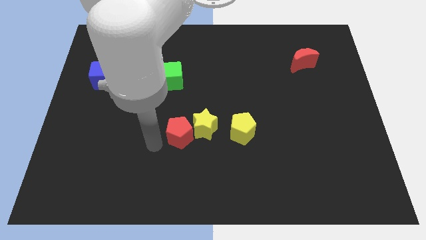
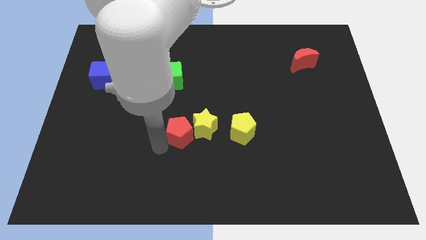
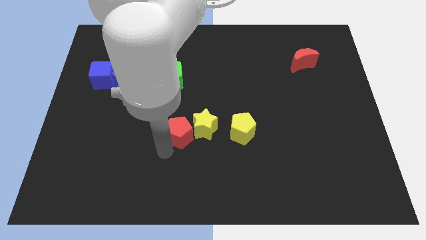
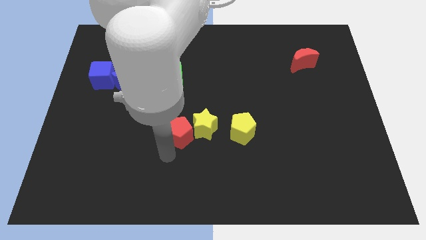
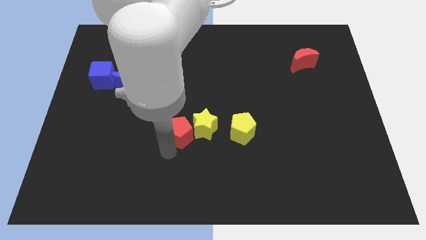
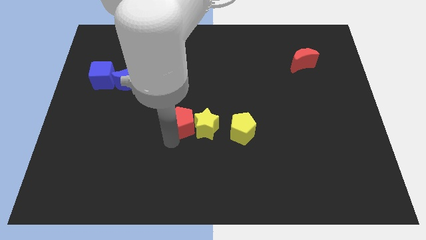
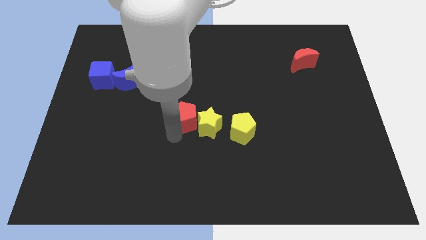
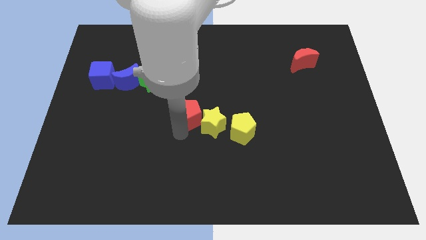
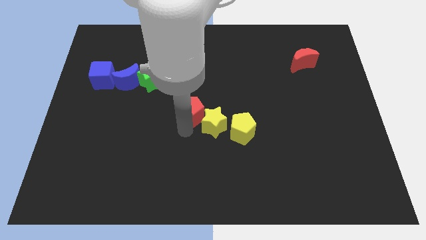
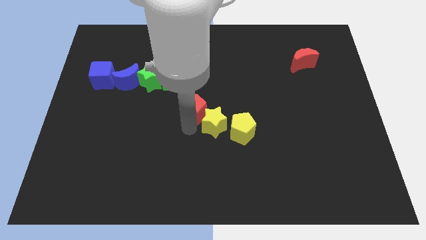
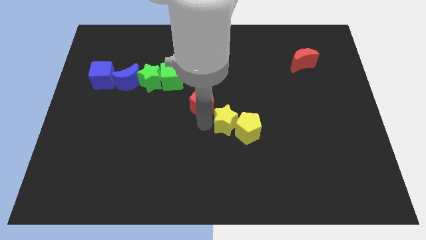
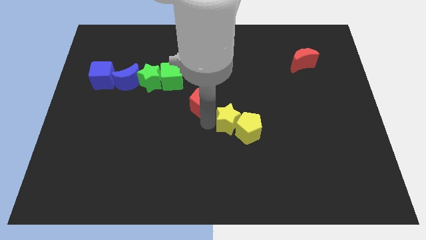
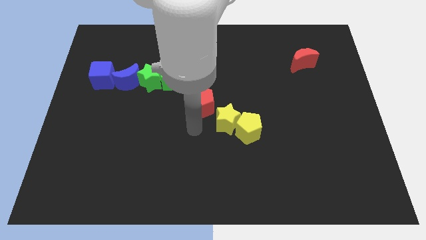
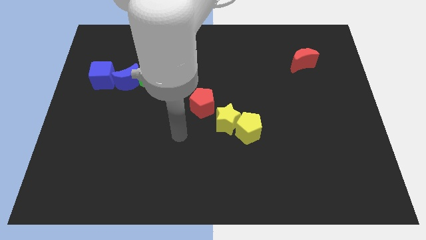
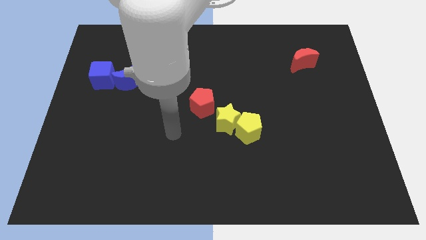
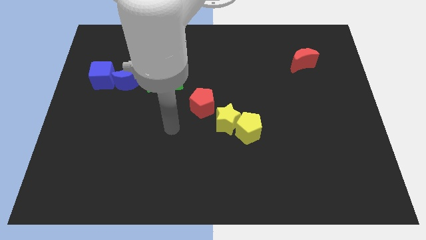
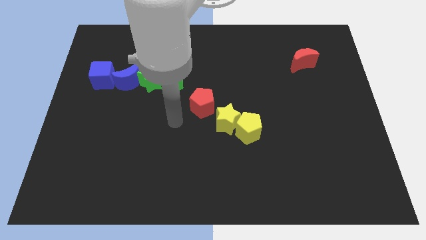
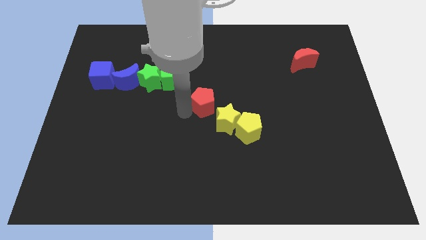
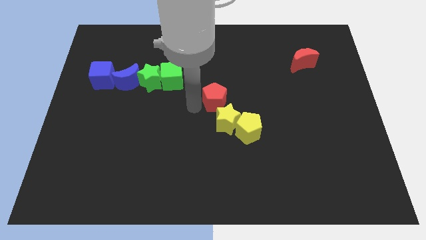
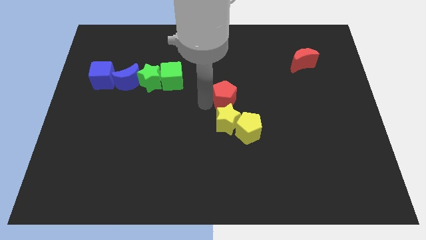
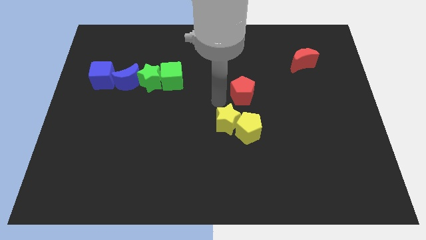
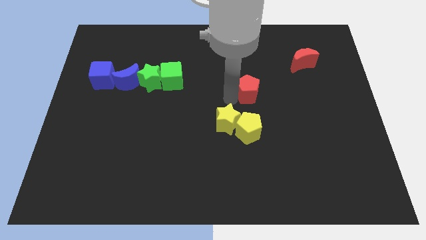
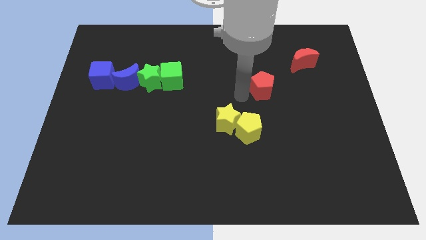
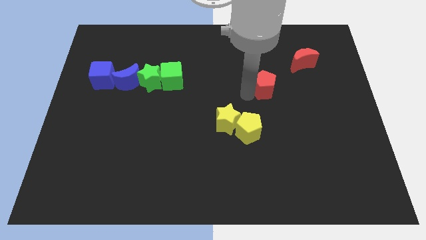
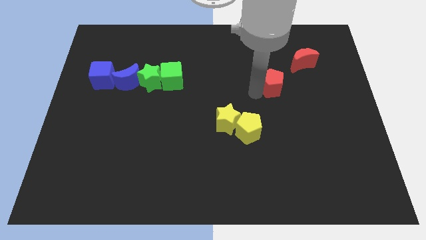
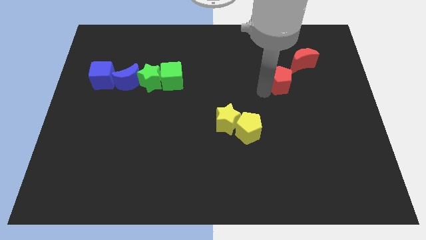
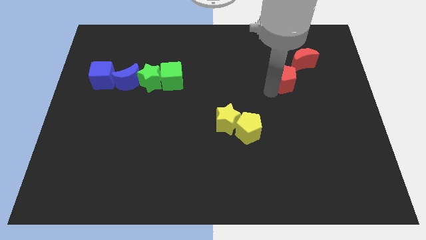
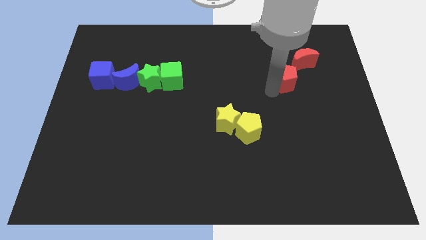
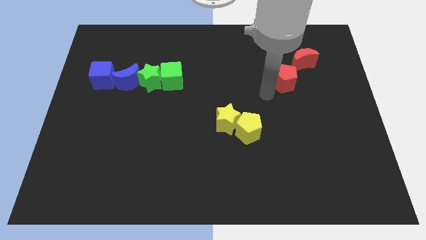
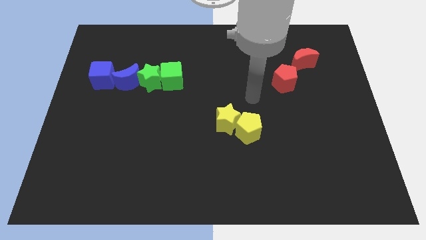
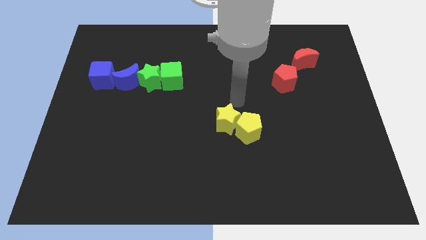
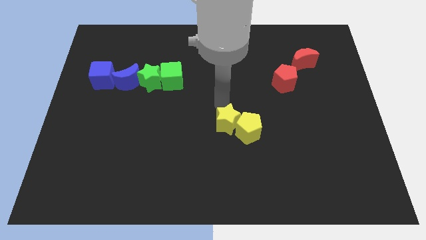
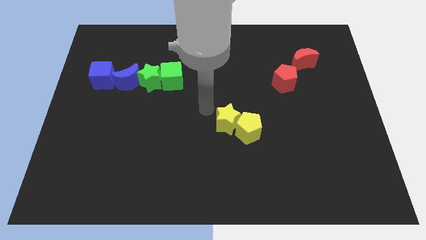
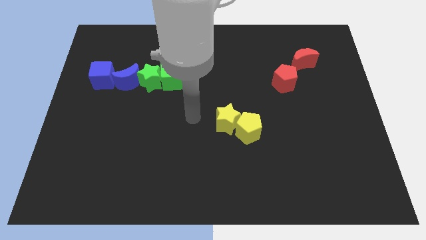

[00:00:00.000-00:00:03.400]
place red pentagon to the bottom left of red moon

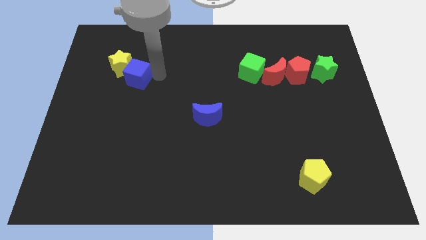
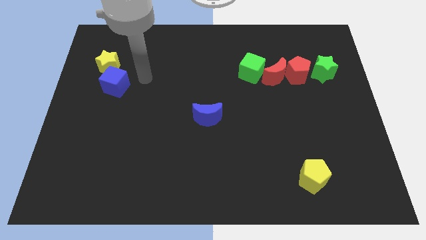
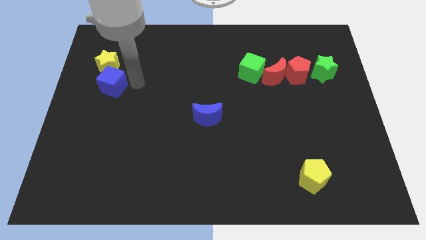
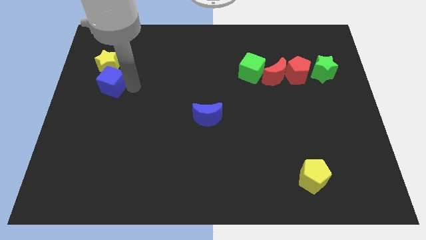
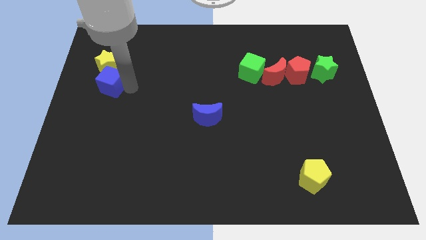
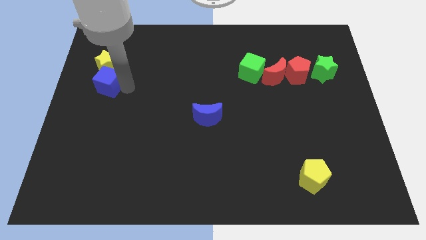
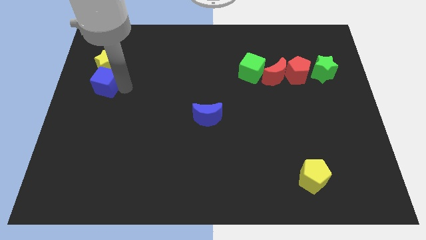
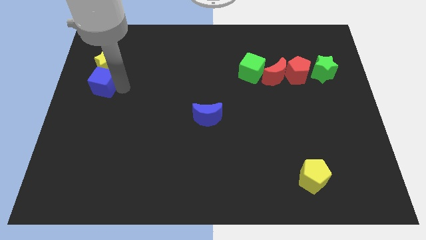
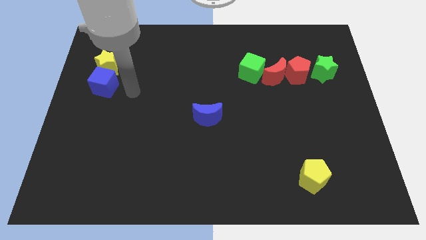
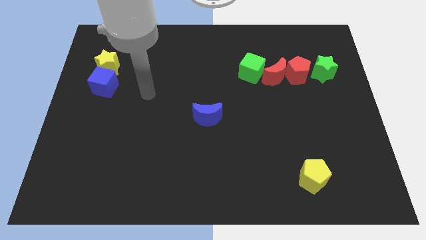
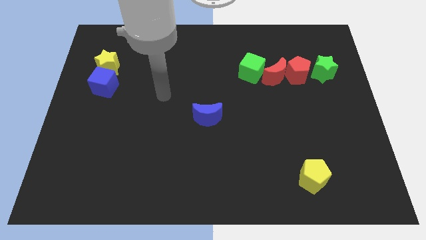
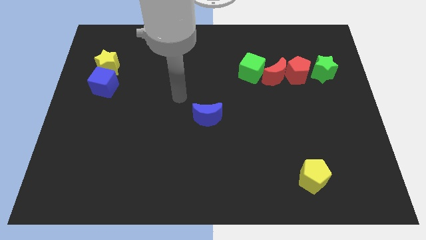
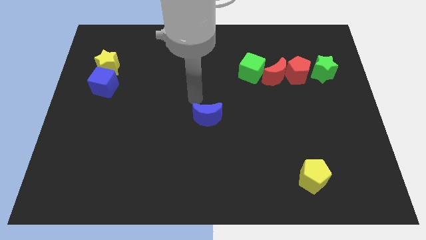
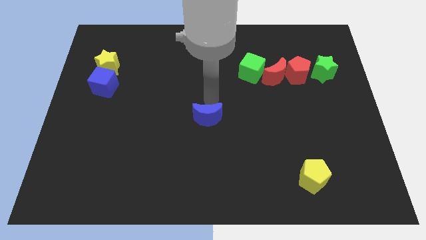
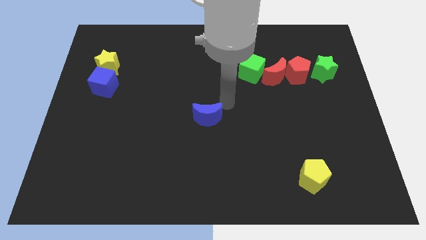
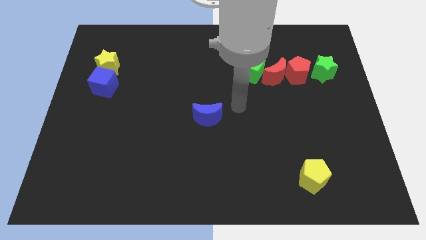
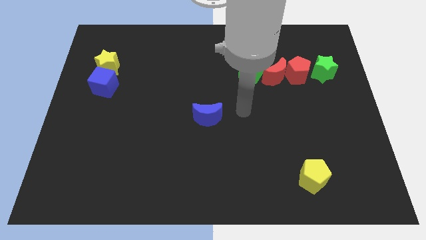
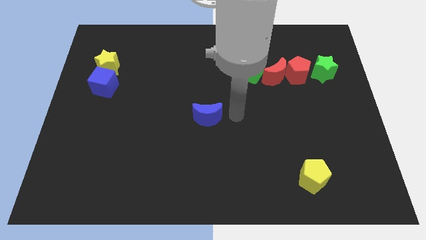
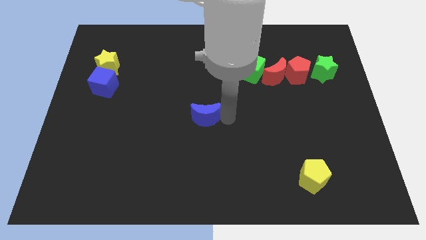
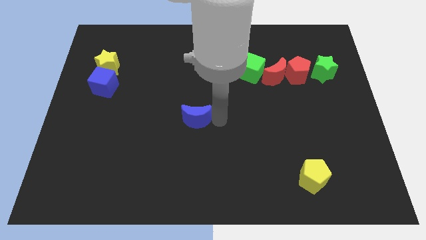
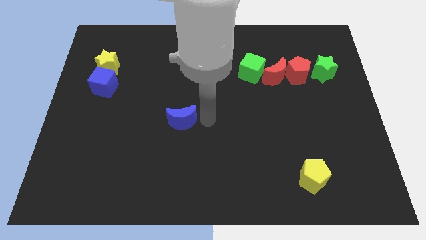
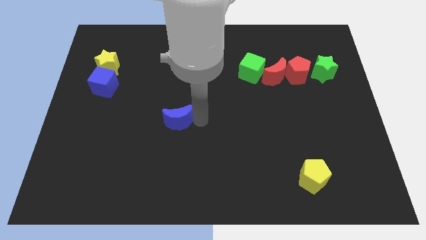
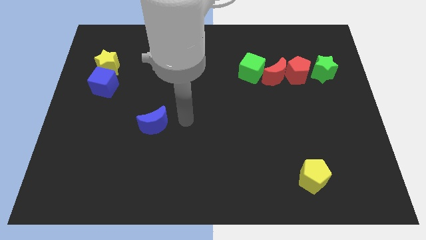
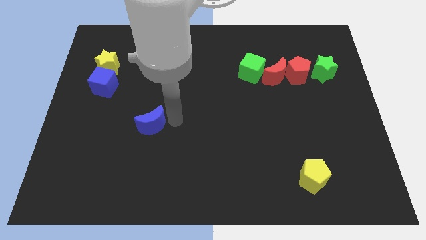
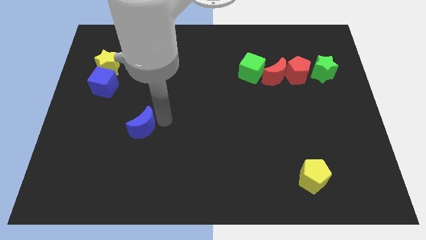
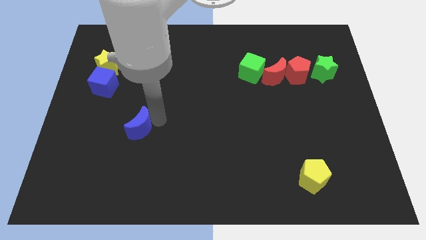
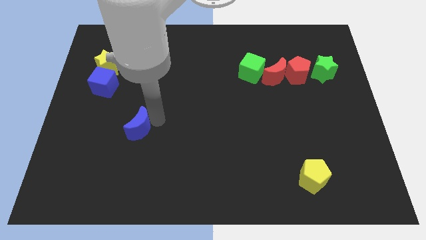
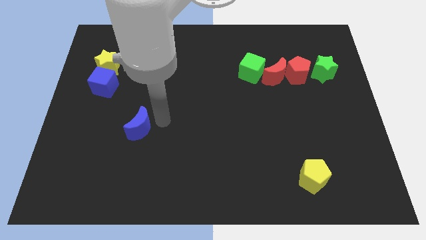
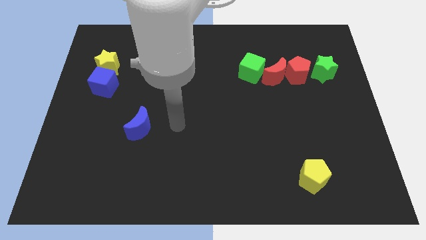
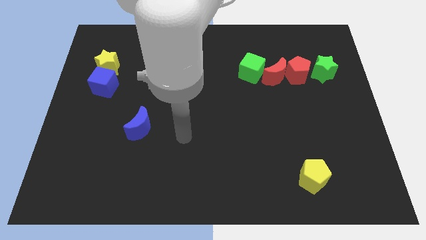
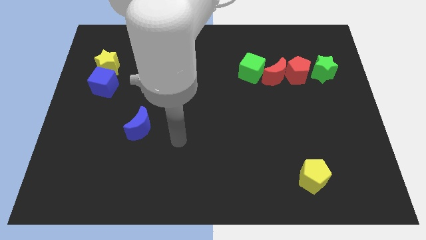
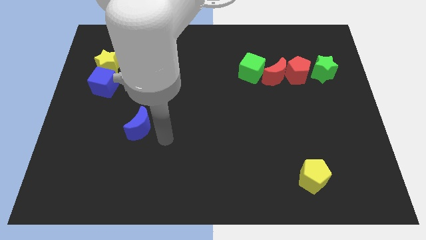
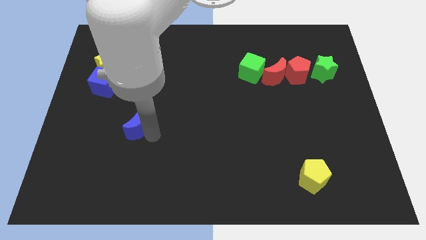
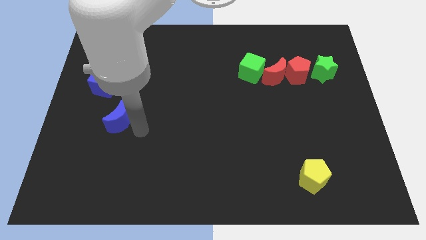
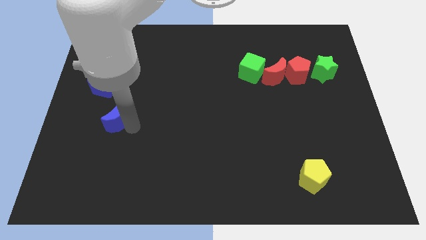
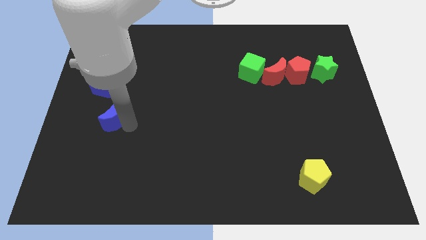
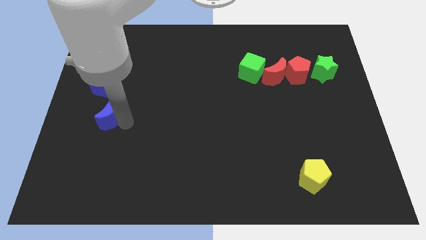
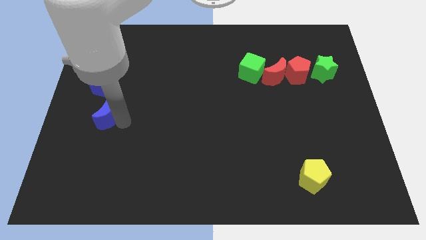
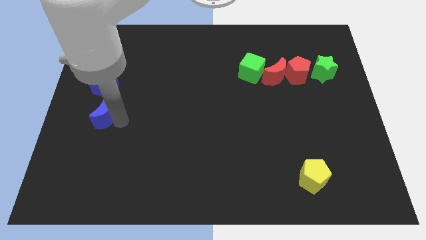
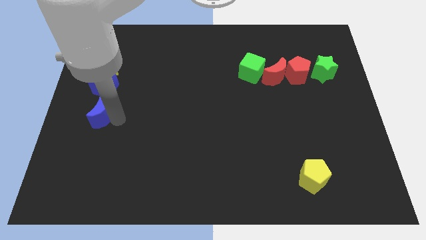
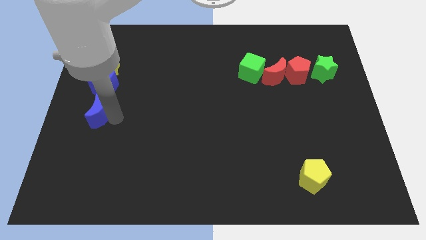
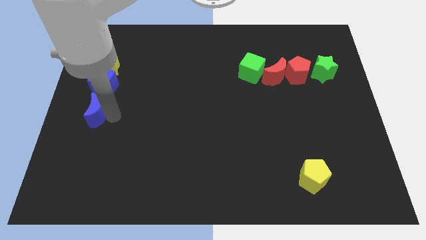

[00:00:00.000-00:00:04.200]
move the blue blocks and yellow star to the left

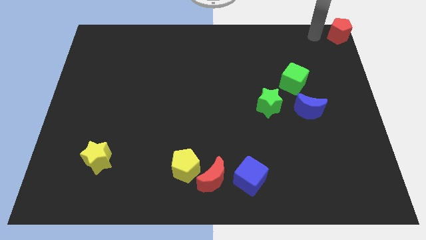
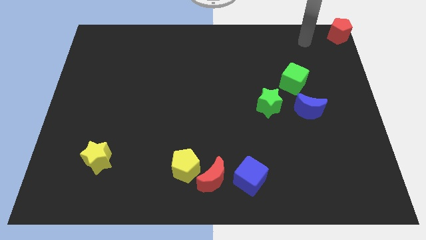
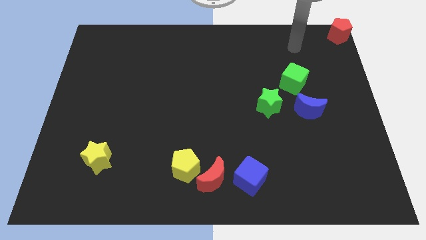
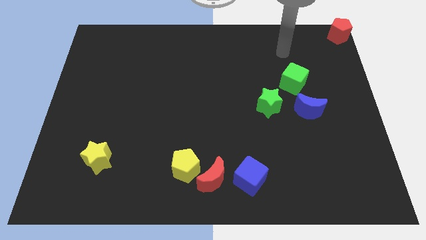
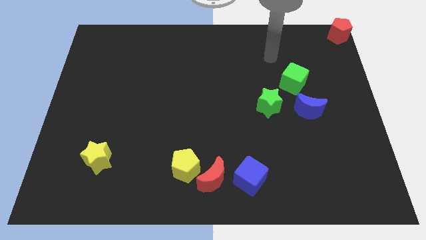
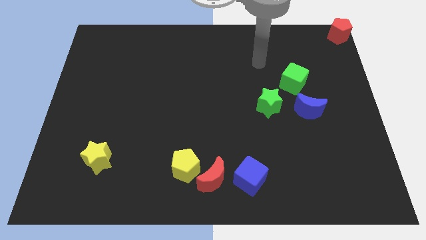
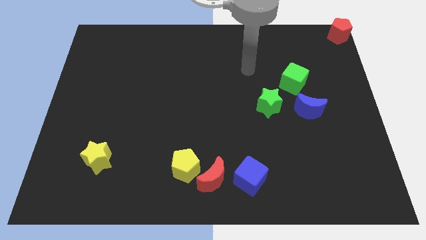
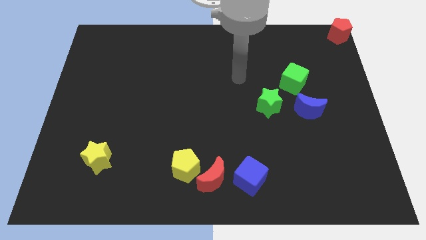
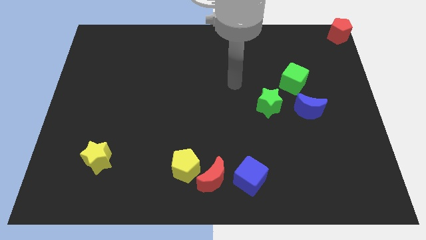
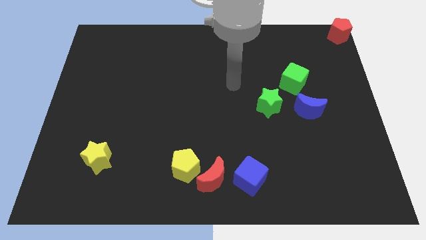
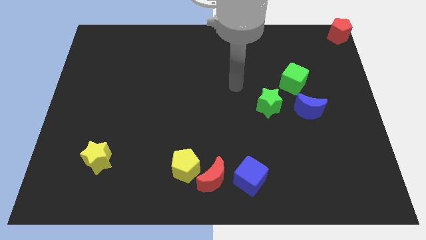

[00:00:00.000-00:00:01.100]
move your arm away from the red pentagon

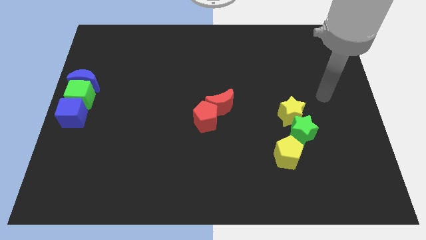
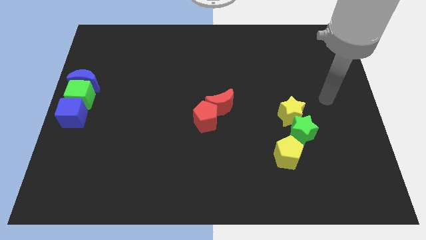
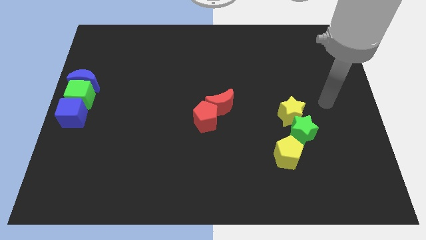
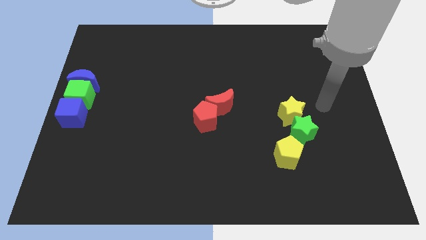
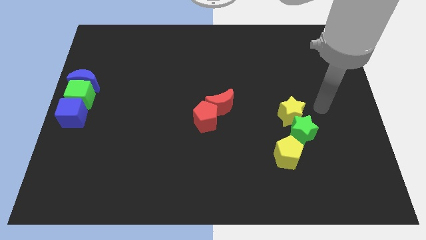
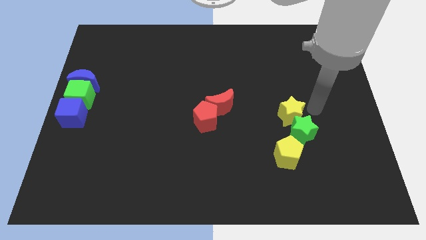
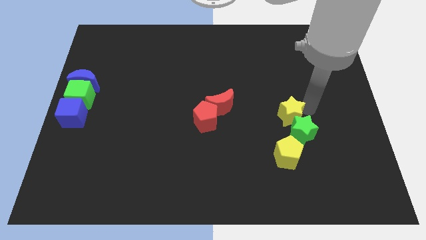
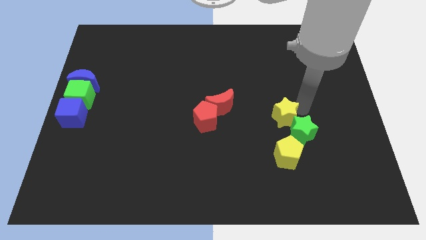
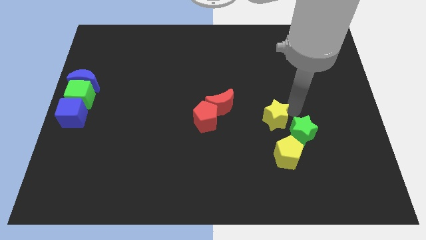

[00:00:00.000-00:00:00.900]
touch the yellow star
